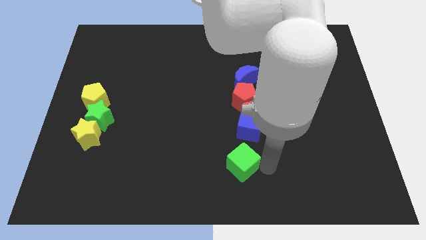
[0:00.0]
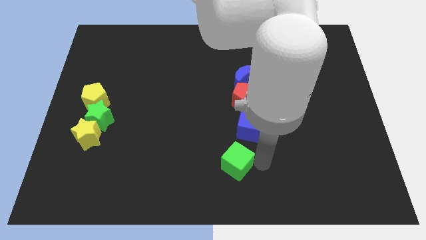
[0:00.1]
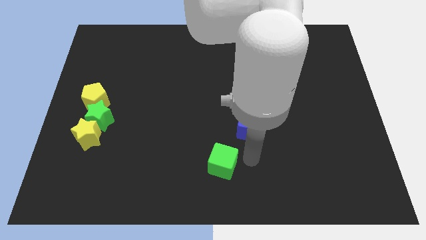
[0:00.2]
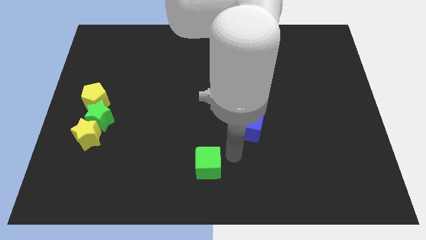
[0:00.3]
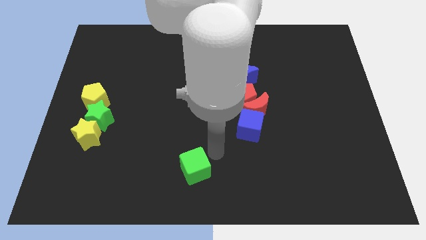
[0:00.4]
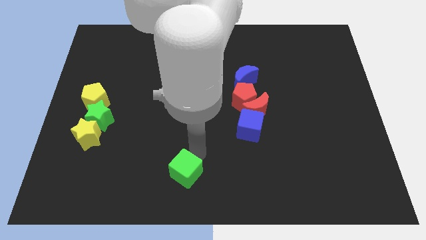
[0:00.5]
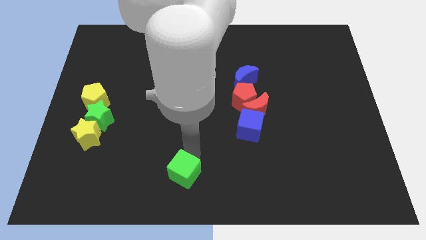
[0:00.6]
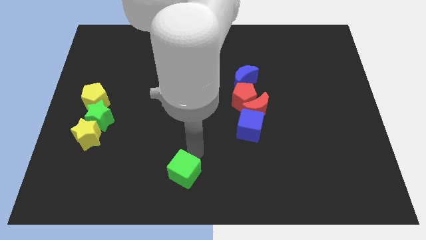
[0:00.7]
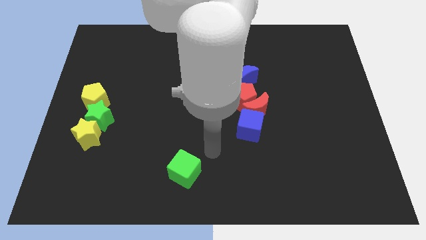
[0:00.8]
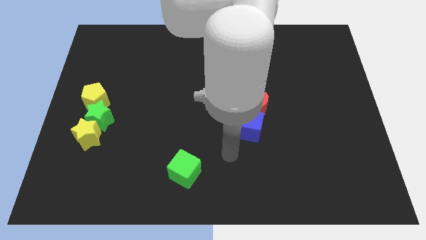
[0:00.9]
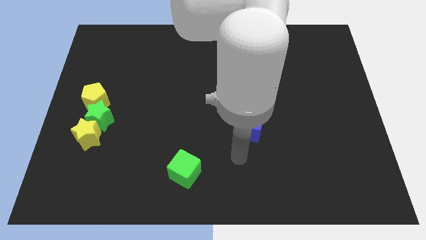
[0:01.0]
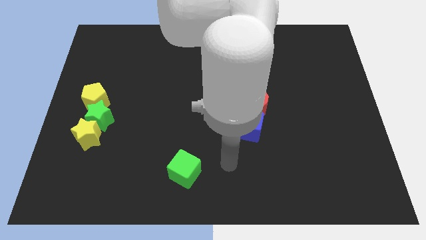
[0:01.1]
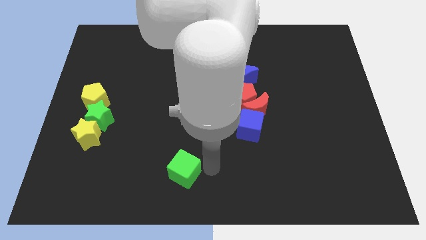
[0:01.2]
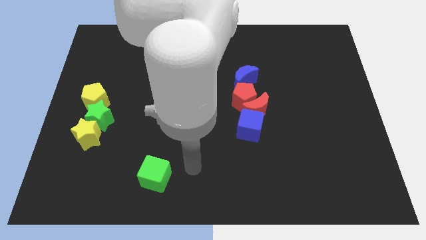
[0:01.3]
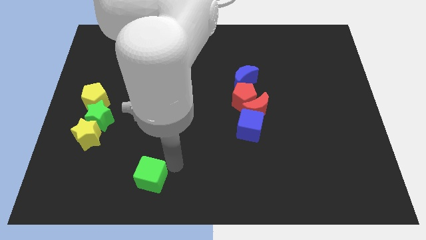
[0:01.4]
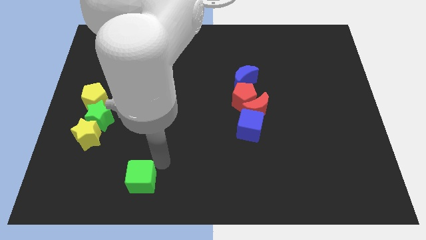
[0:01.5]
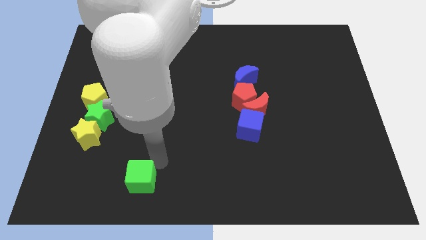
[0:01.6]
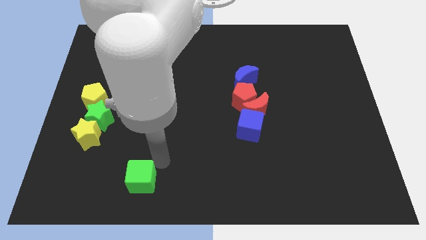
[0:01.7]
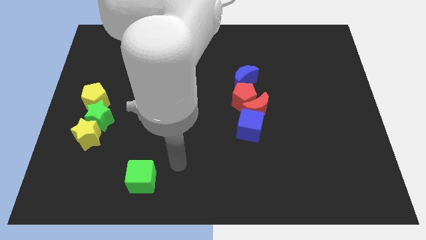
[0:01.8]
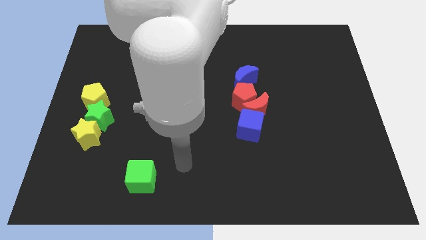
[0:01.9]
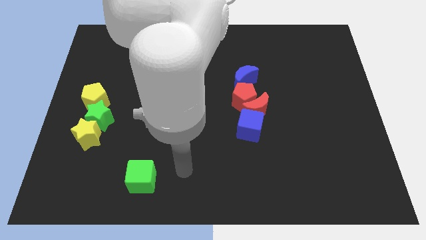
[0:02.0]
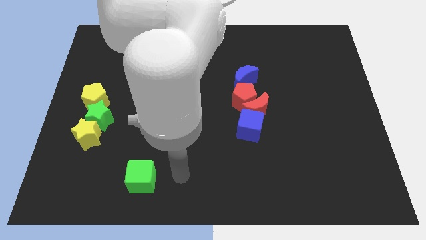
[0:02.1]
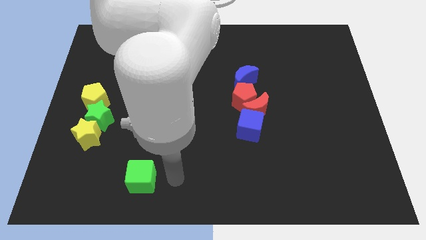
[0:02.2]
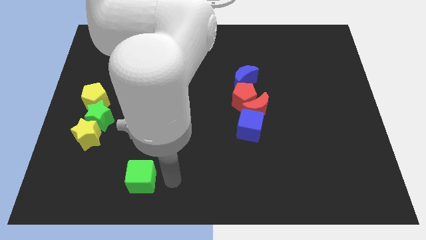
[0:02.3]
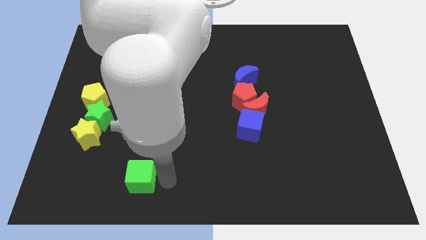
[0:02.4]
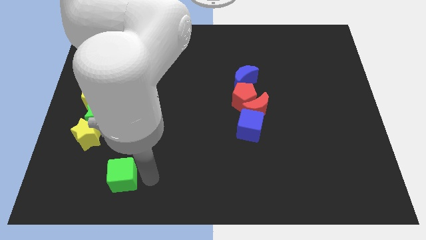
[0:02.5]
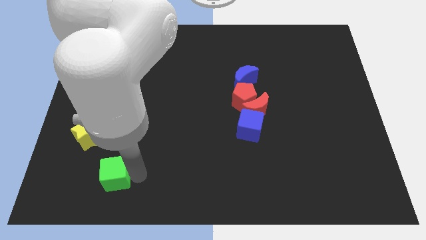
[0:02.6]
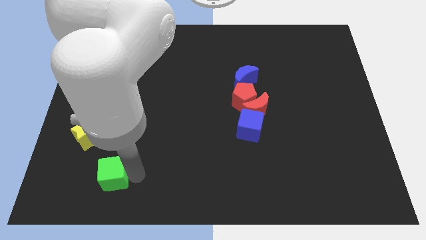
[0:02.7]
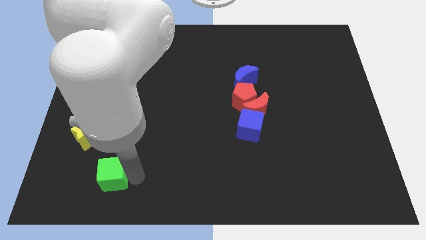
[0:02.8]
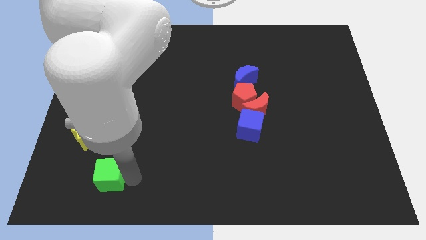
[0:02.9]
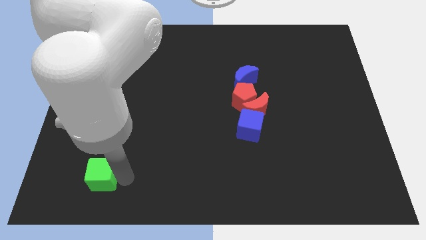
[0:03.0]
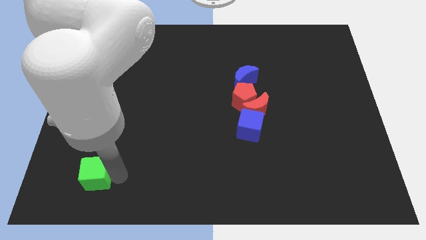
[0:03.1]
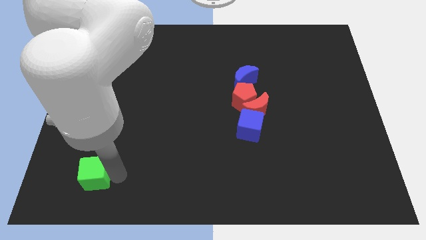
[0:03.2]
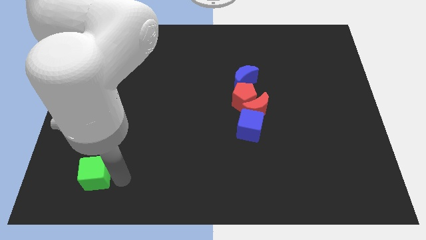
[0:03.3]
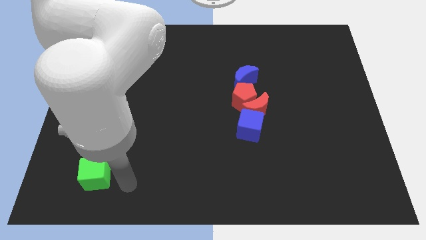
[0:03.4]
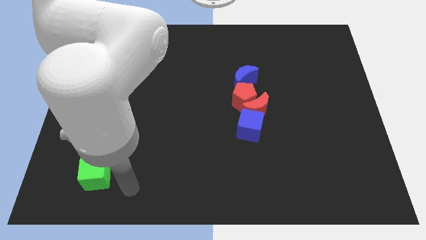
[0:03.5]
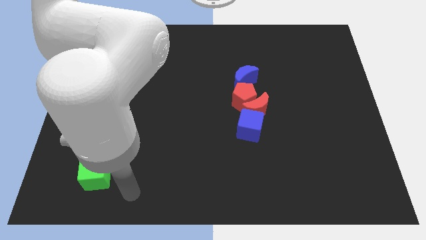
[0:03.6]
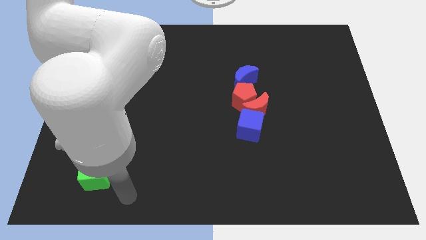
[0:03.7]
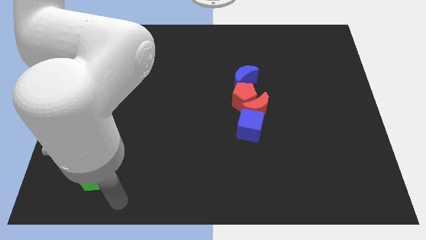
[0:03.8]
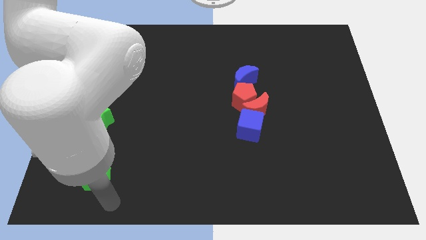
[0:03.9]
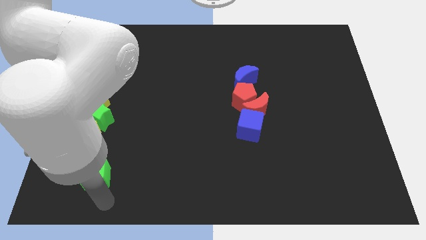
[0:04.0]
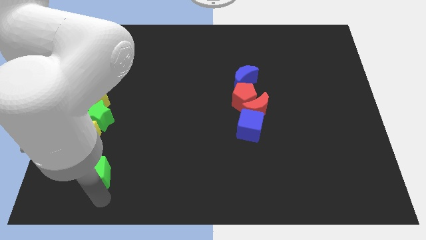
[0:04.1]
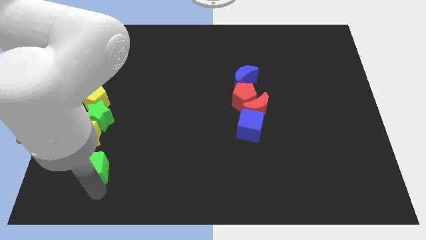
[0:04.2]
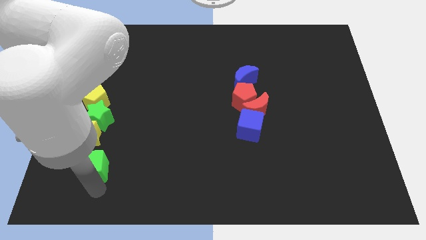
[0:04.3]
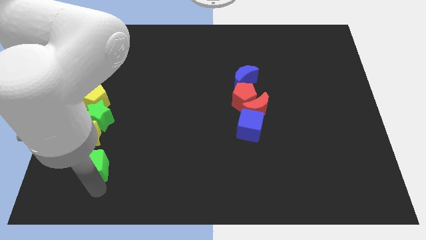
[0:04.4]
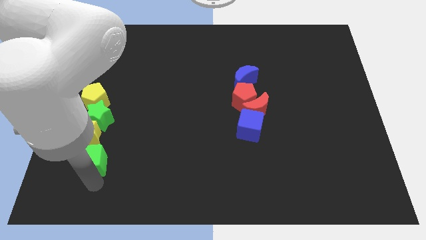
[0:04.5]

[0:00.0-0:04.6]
move the green cube below the yellow star

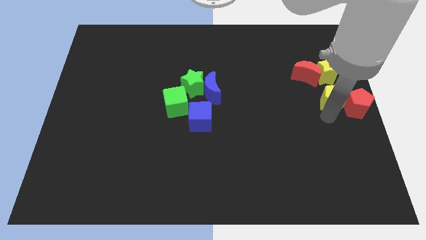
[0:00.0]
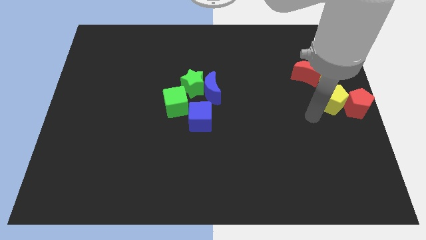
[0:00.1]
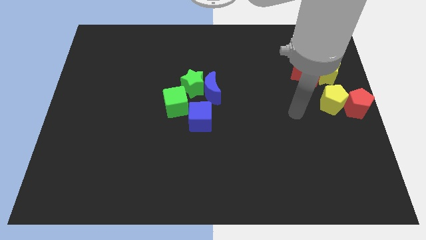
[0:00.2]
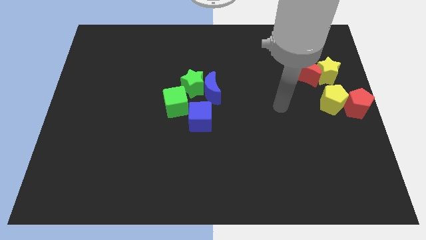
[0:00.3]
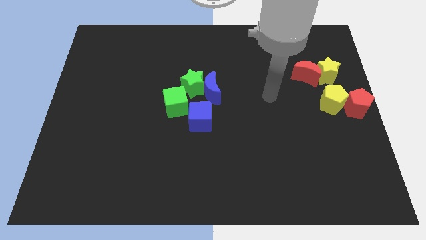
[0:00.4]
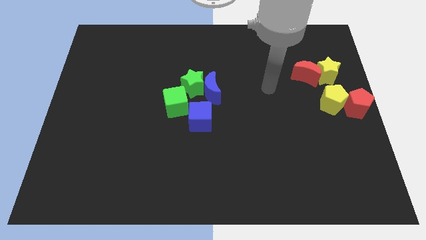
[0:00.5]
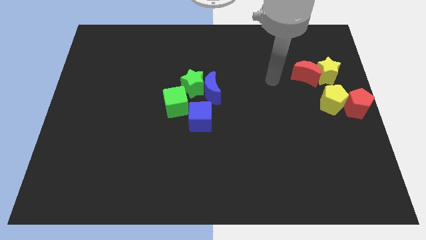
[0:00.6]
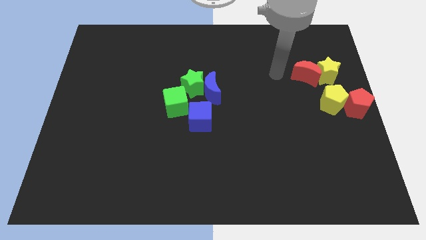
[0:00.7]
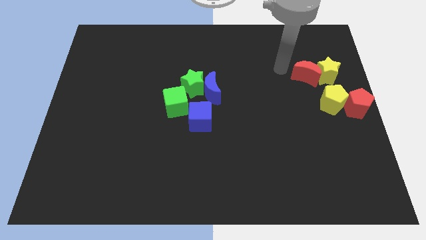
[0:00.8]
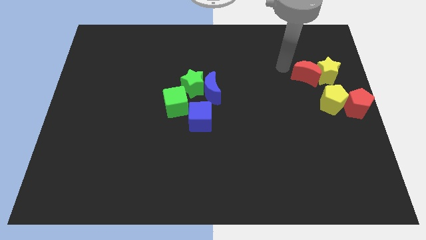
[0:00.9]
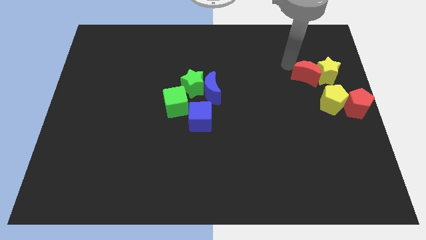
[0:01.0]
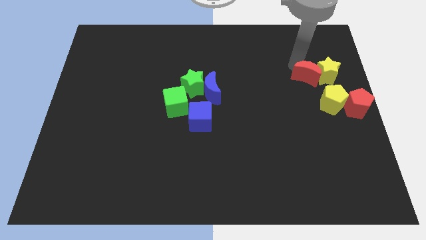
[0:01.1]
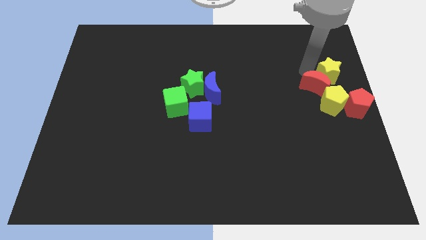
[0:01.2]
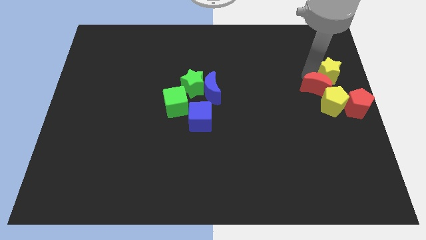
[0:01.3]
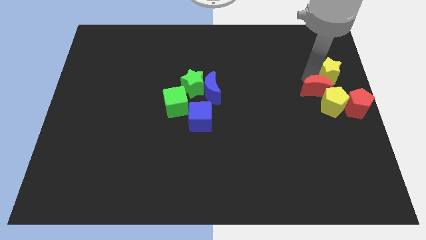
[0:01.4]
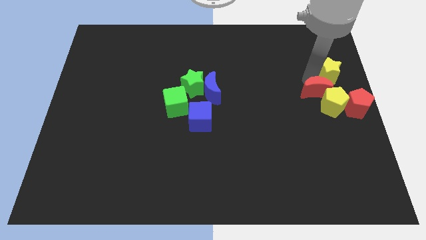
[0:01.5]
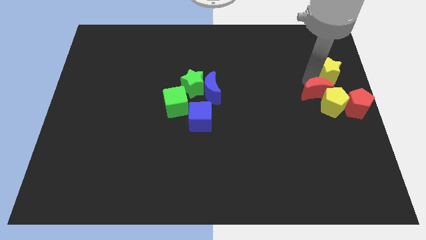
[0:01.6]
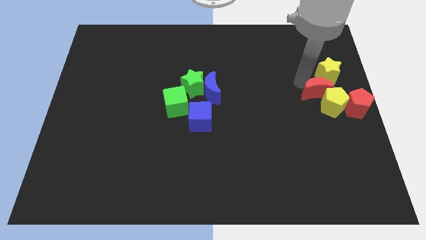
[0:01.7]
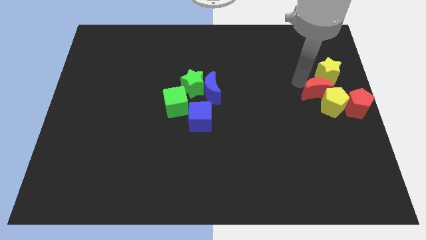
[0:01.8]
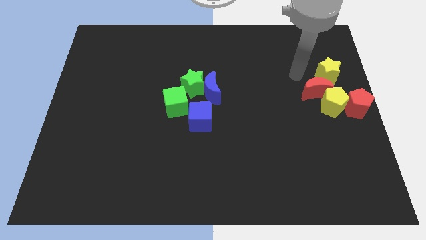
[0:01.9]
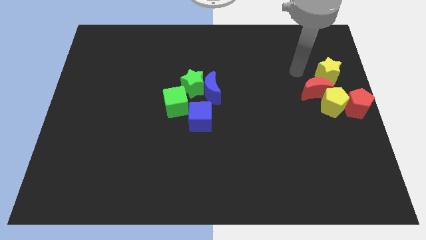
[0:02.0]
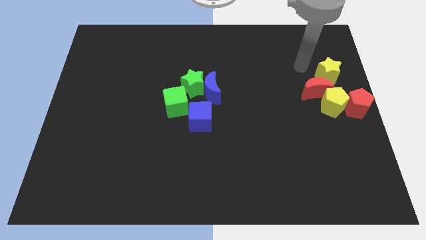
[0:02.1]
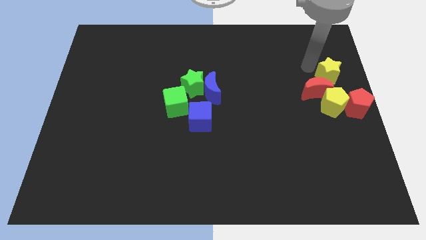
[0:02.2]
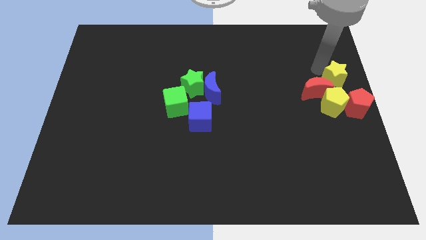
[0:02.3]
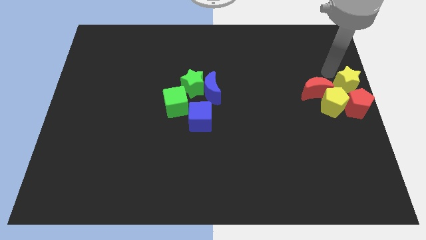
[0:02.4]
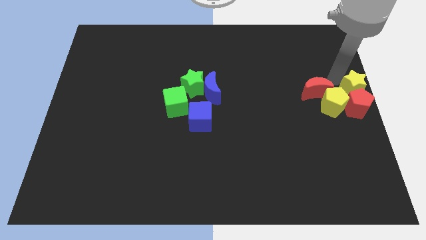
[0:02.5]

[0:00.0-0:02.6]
push the red crescent into yellow pentagon

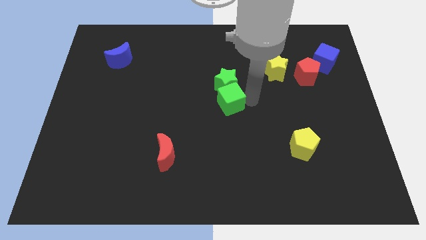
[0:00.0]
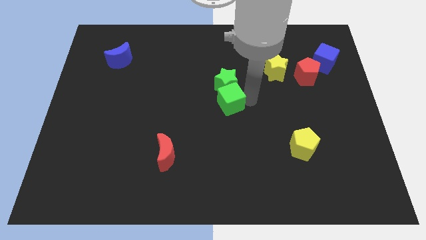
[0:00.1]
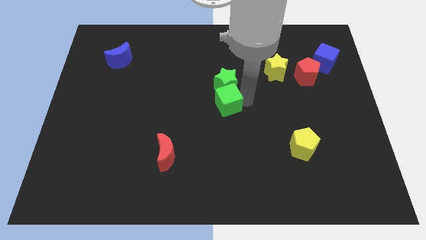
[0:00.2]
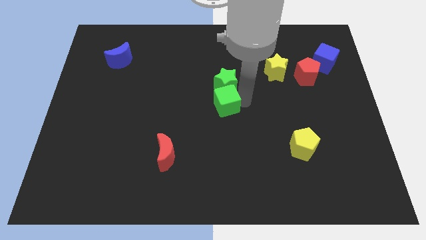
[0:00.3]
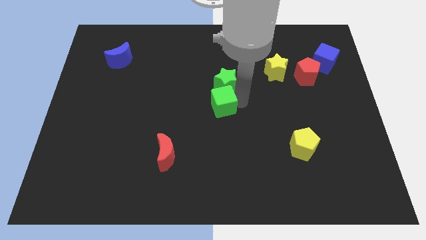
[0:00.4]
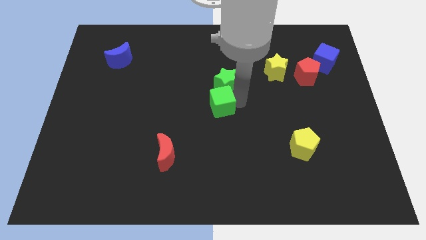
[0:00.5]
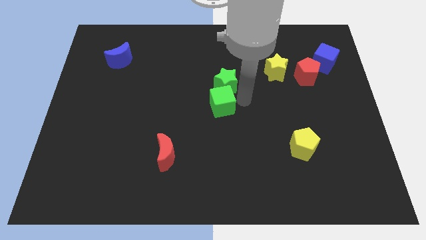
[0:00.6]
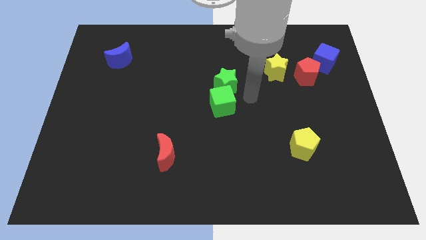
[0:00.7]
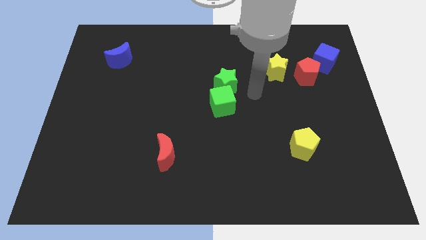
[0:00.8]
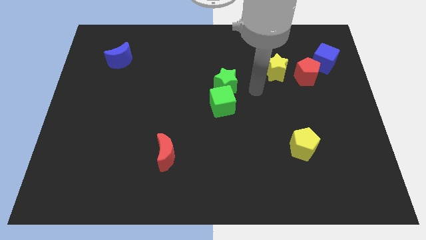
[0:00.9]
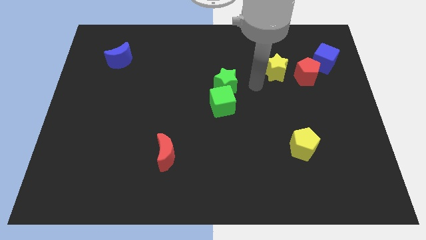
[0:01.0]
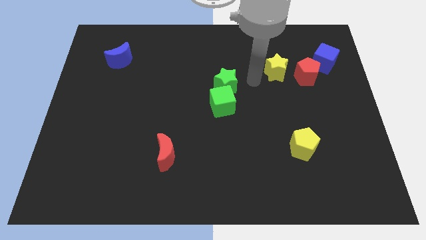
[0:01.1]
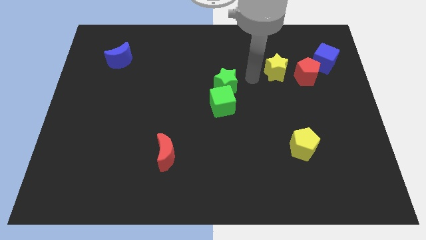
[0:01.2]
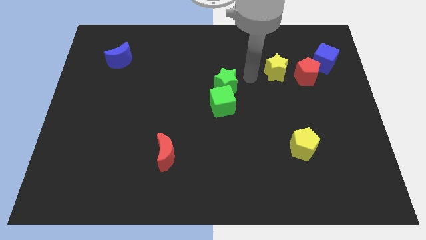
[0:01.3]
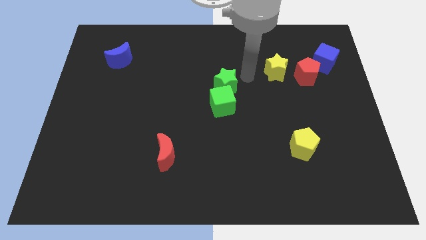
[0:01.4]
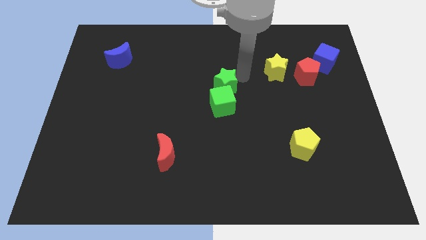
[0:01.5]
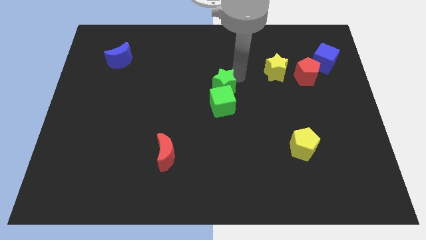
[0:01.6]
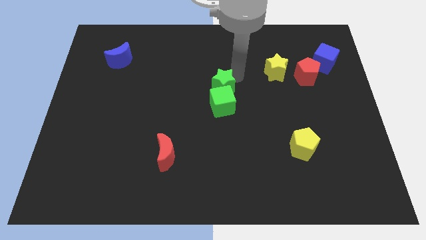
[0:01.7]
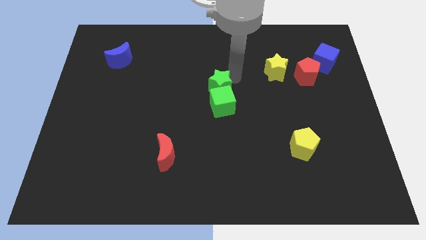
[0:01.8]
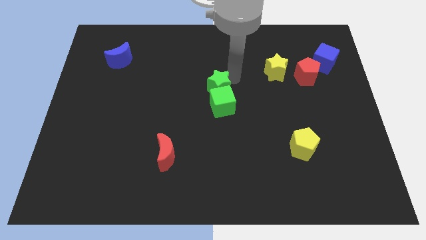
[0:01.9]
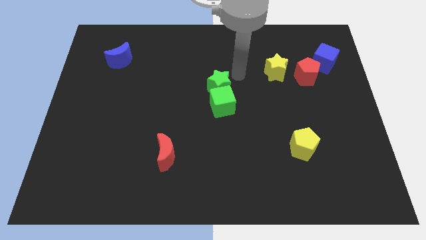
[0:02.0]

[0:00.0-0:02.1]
place the green star and green cube towards the center
